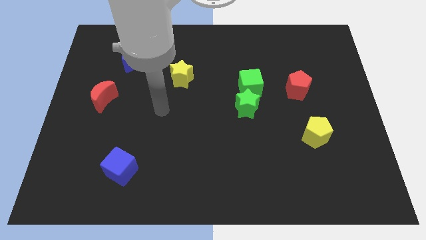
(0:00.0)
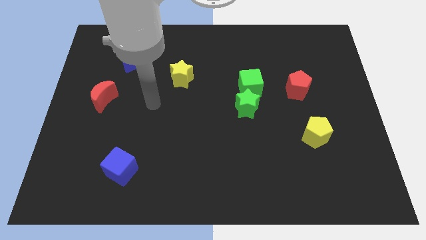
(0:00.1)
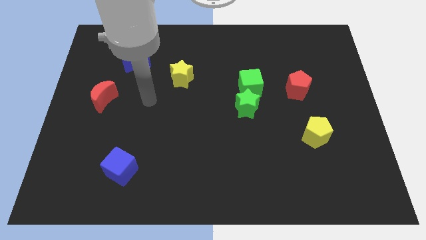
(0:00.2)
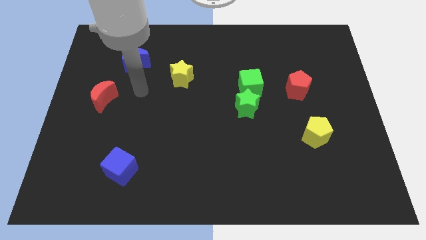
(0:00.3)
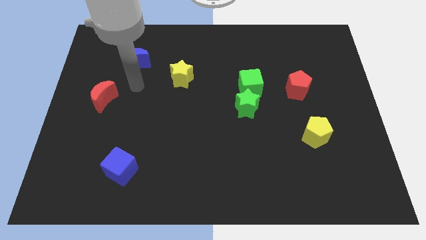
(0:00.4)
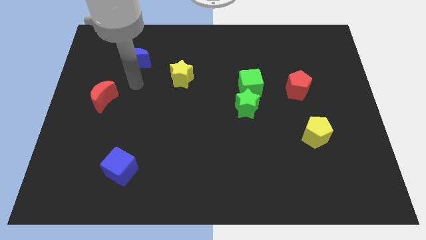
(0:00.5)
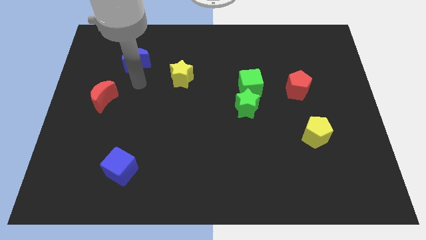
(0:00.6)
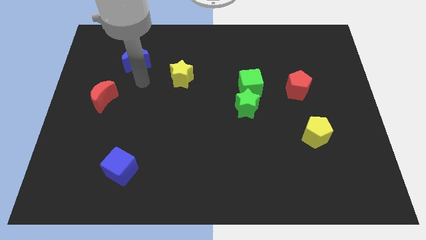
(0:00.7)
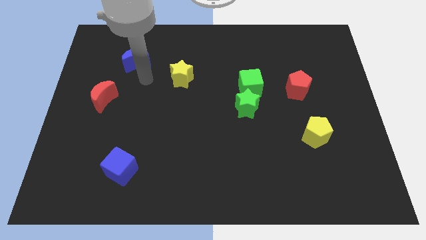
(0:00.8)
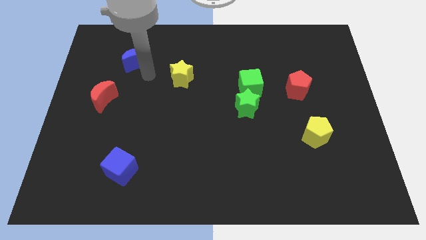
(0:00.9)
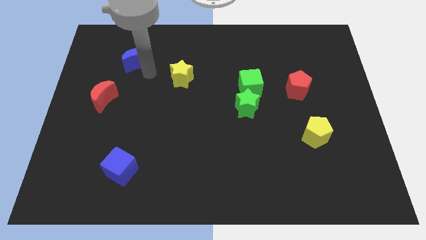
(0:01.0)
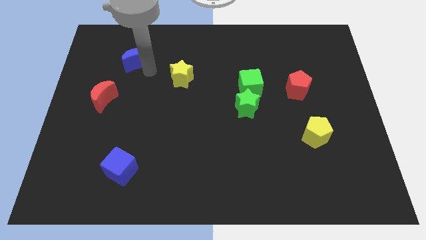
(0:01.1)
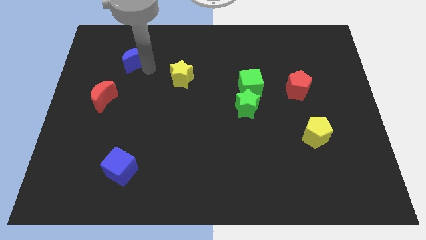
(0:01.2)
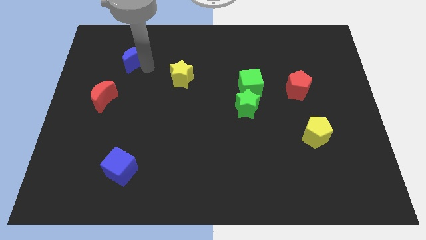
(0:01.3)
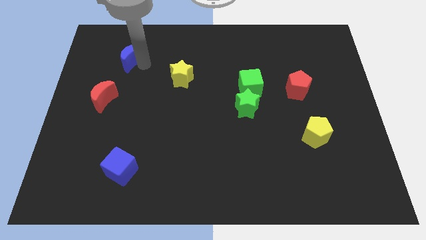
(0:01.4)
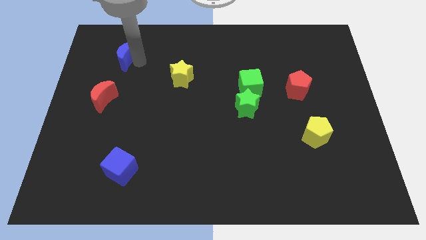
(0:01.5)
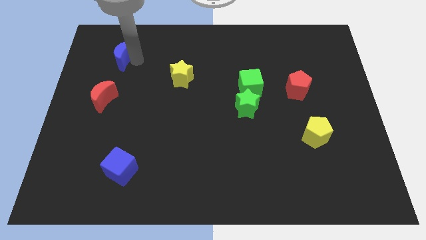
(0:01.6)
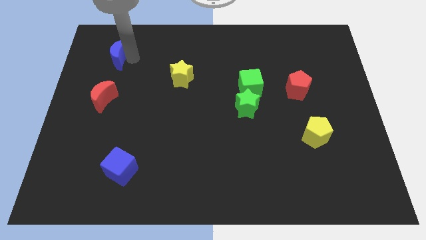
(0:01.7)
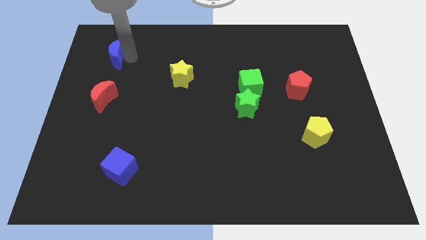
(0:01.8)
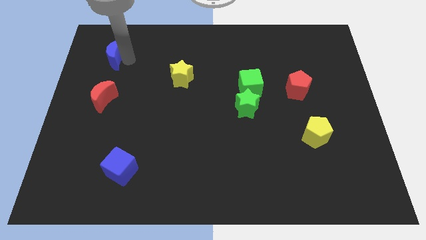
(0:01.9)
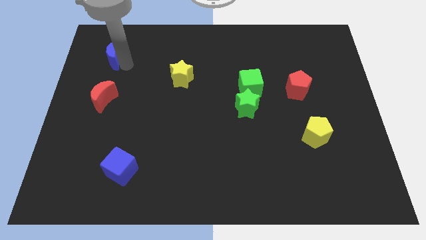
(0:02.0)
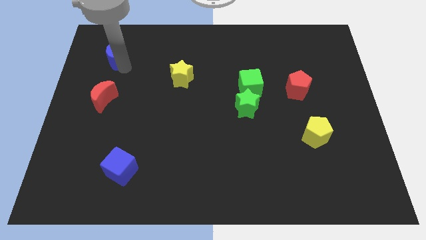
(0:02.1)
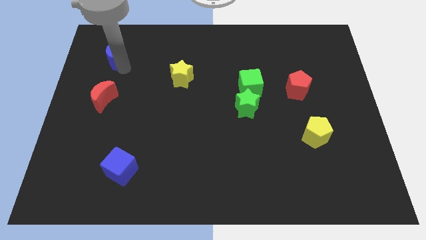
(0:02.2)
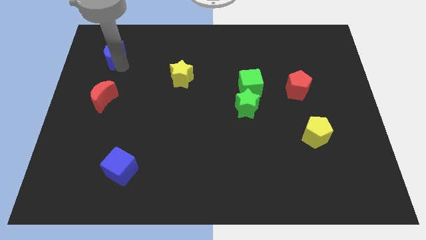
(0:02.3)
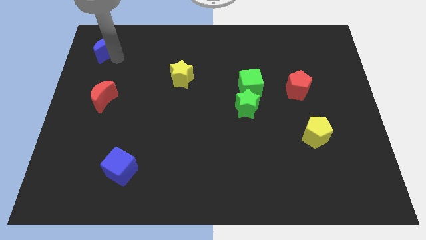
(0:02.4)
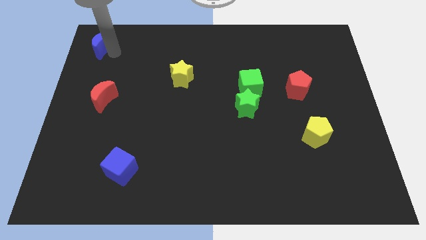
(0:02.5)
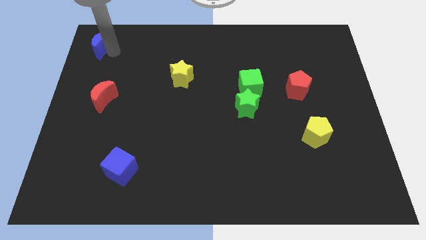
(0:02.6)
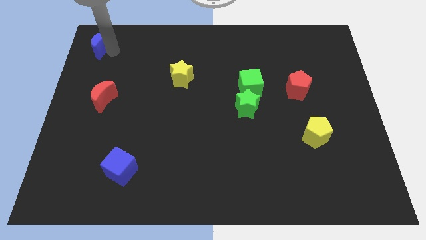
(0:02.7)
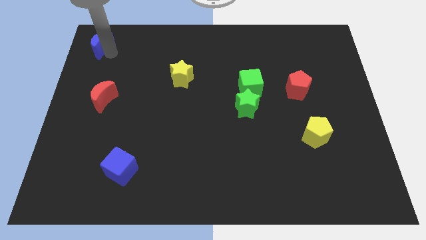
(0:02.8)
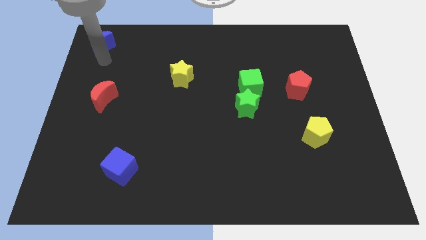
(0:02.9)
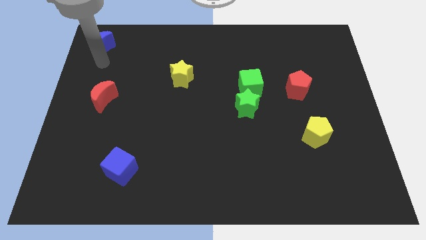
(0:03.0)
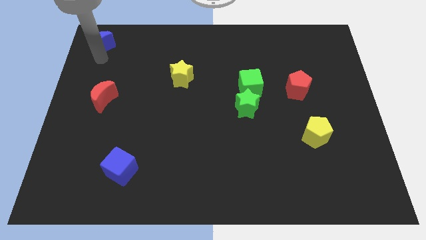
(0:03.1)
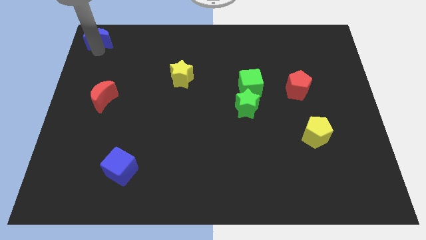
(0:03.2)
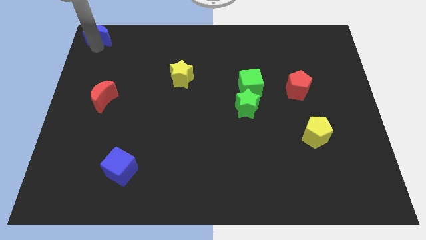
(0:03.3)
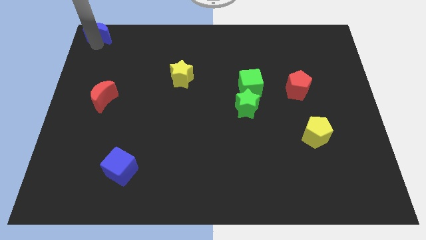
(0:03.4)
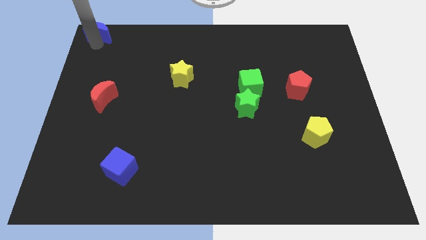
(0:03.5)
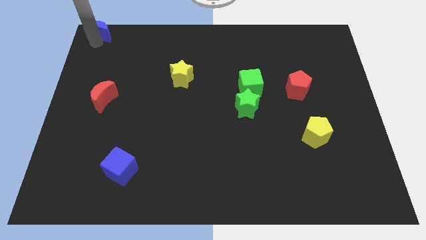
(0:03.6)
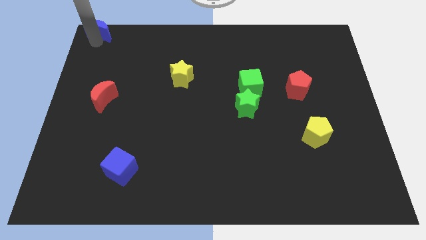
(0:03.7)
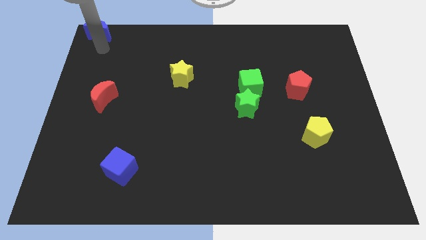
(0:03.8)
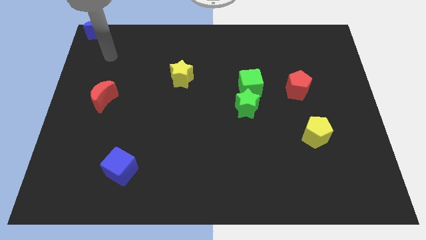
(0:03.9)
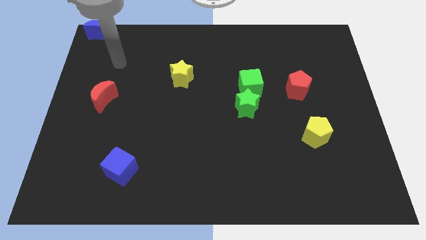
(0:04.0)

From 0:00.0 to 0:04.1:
place the blue crescent to the top left corner of the board

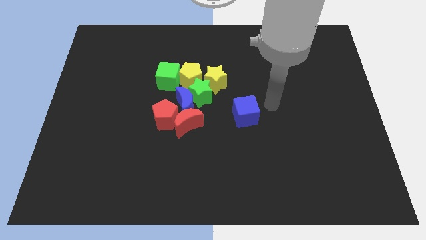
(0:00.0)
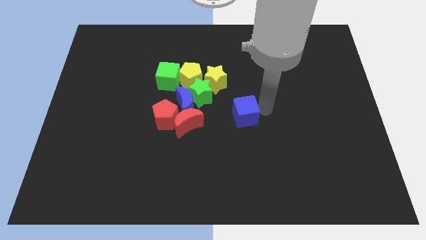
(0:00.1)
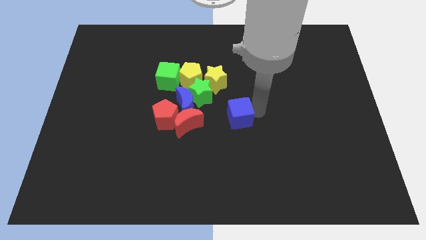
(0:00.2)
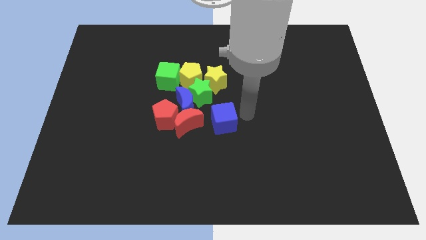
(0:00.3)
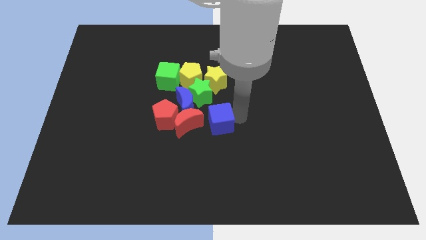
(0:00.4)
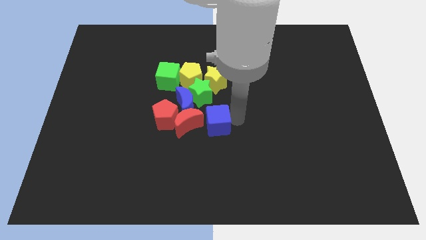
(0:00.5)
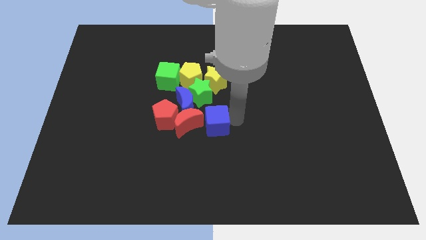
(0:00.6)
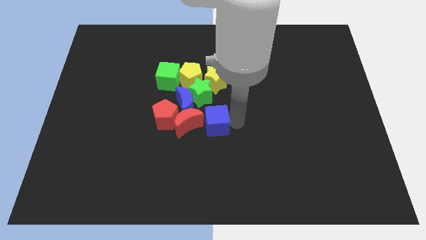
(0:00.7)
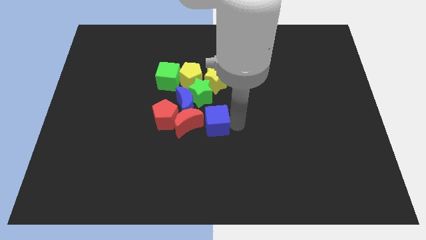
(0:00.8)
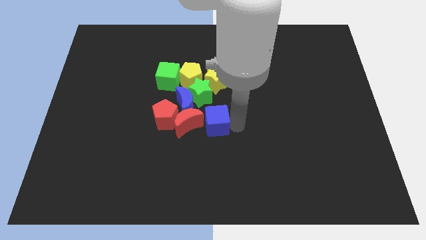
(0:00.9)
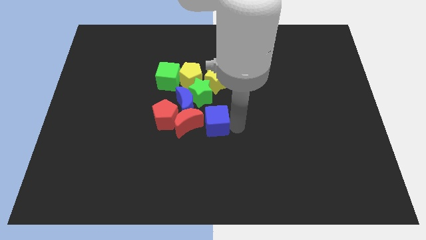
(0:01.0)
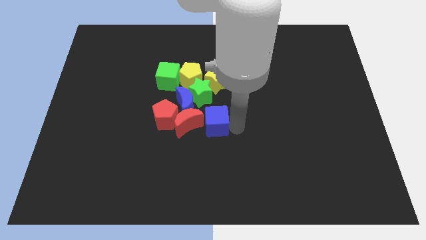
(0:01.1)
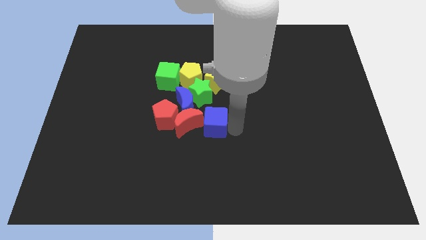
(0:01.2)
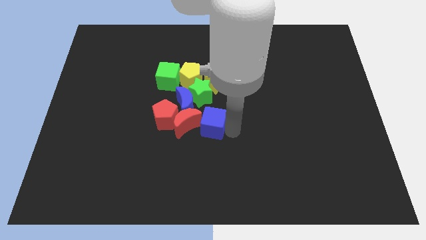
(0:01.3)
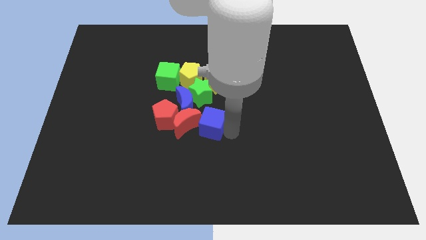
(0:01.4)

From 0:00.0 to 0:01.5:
make the blue cube to touch the red crescent

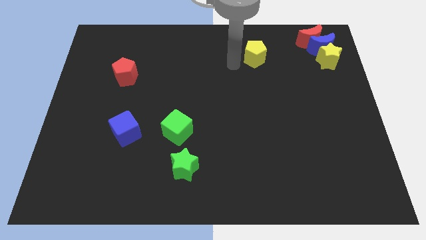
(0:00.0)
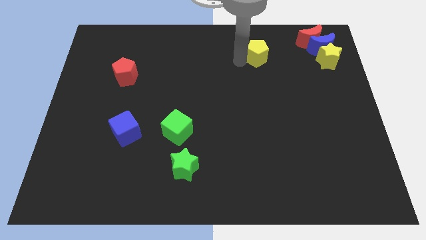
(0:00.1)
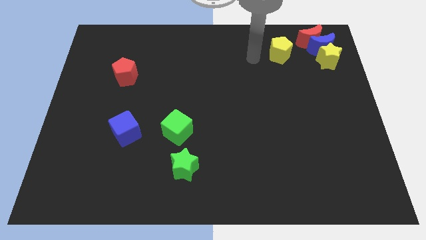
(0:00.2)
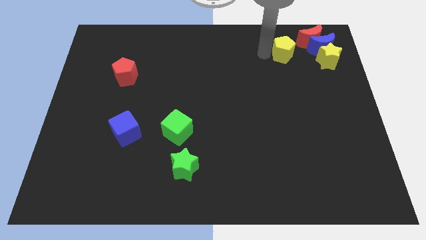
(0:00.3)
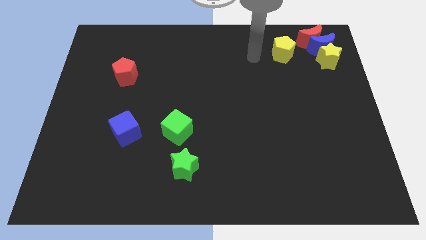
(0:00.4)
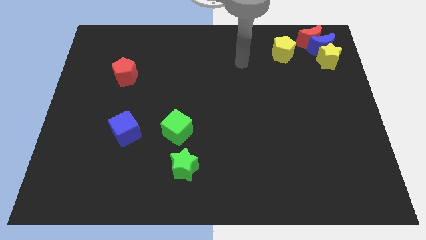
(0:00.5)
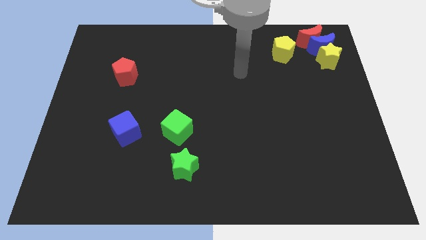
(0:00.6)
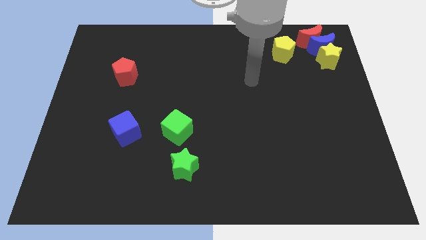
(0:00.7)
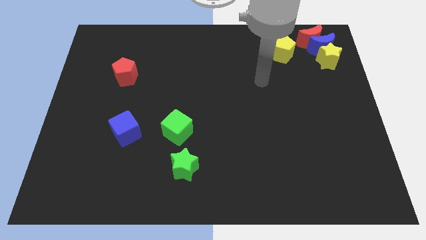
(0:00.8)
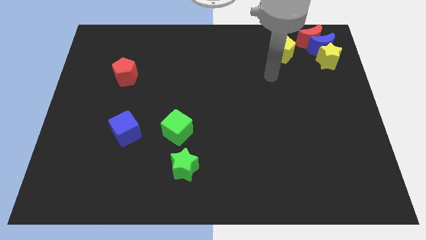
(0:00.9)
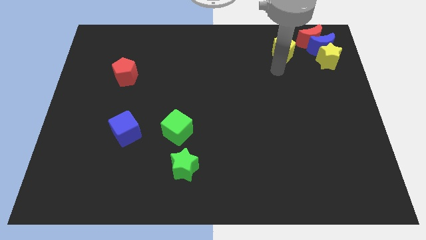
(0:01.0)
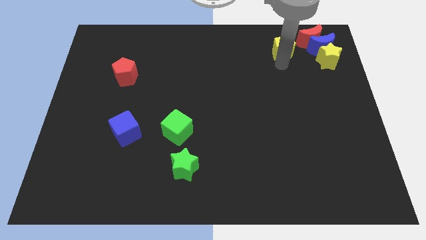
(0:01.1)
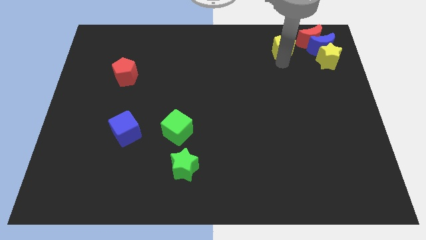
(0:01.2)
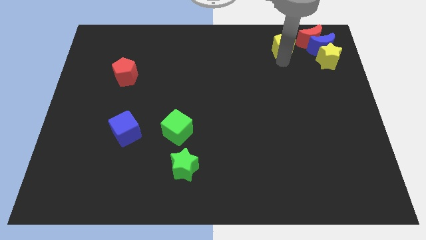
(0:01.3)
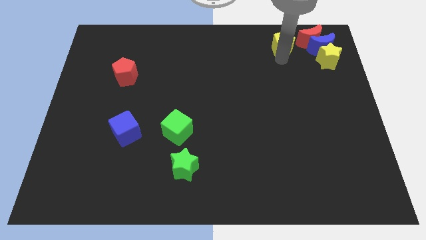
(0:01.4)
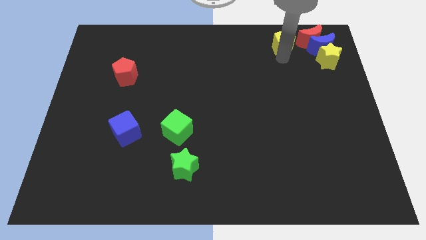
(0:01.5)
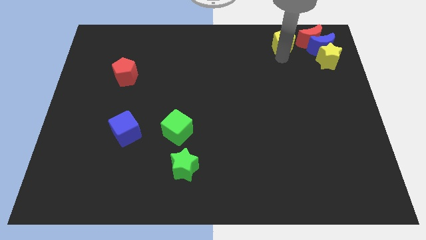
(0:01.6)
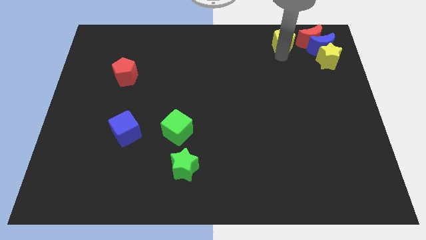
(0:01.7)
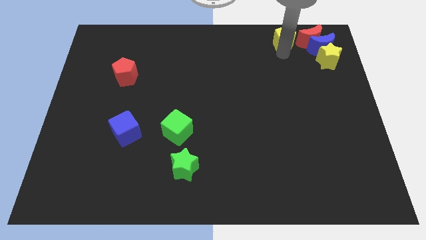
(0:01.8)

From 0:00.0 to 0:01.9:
move the yellow pentagon to the left of the red crescent

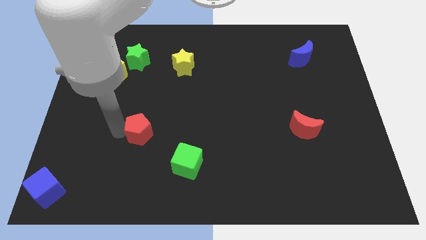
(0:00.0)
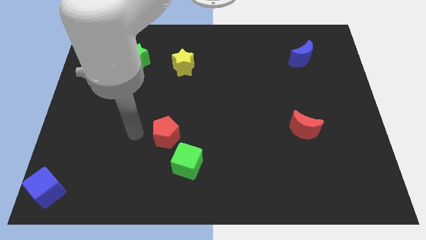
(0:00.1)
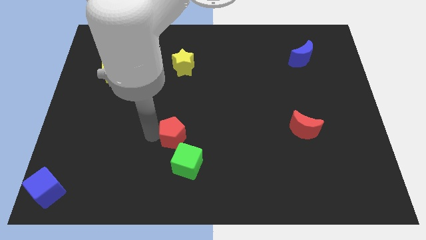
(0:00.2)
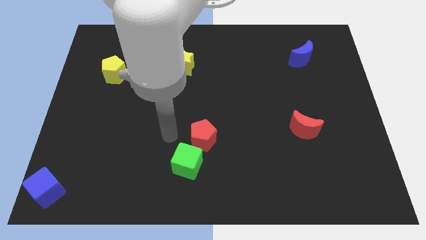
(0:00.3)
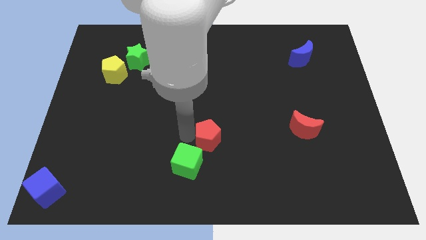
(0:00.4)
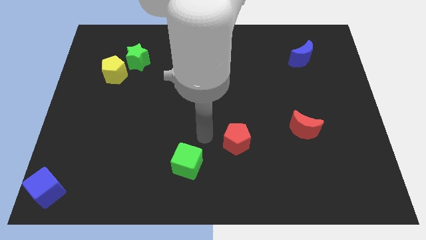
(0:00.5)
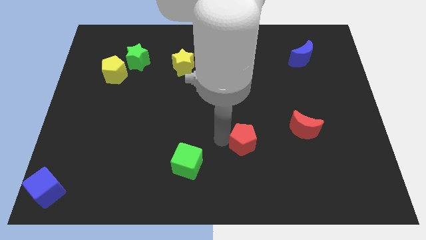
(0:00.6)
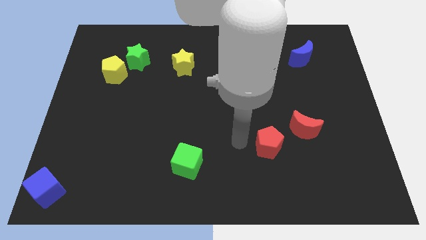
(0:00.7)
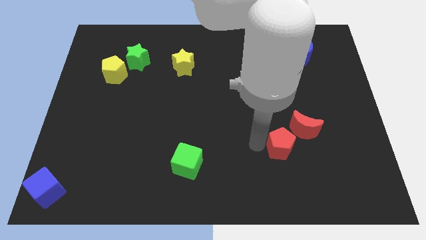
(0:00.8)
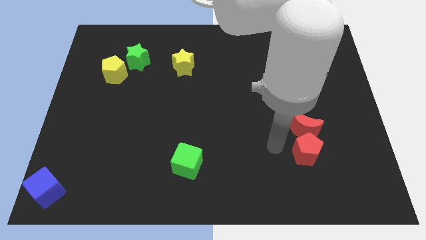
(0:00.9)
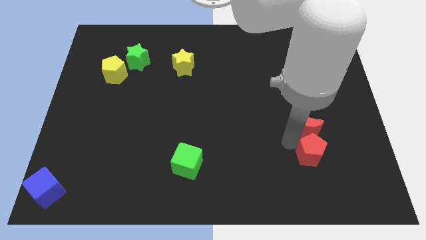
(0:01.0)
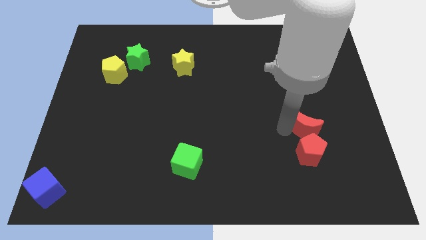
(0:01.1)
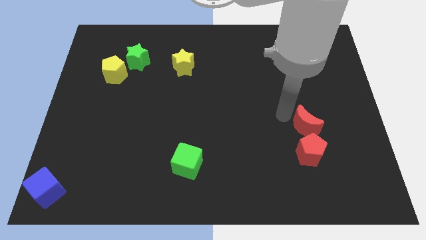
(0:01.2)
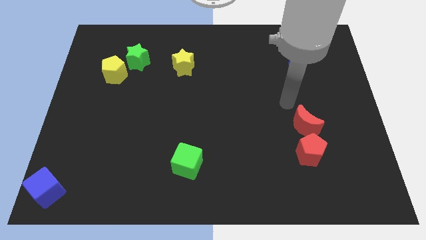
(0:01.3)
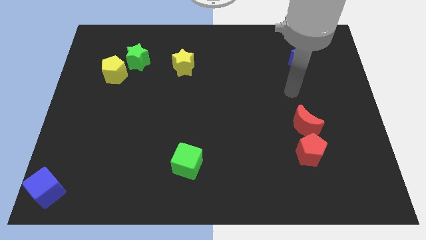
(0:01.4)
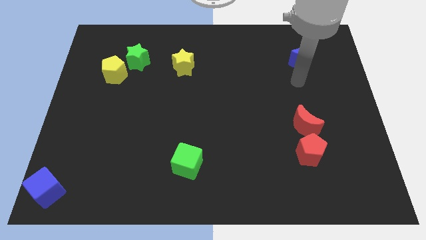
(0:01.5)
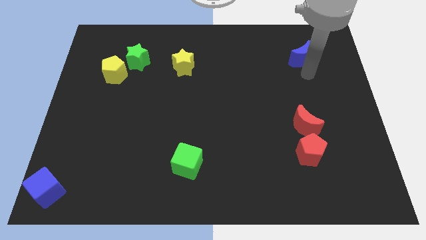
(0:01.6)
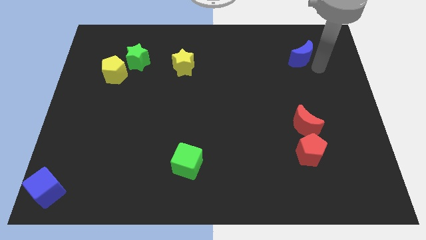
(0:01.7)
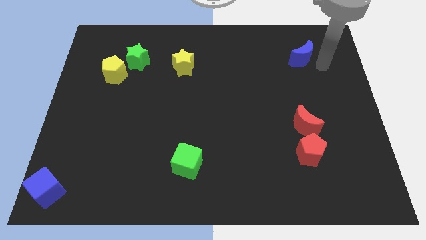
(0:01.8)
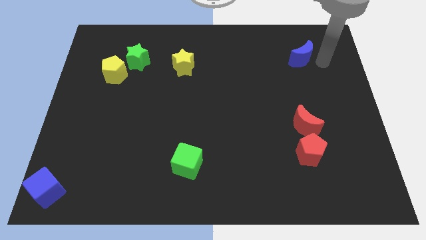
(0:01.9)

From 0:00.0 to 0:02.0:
place the red pentagon below the red crescent
